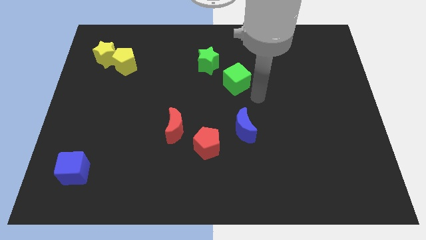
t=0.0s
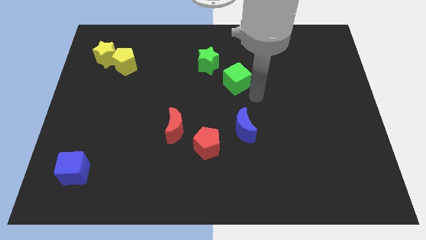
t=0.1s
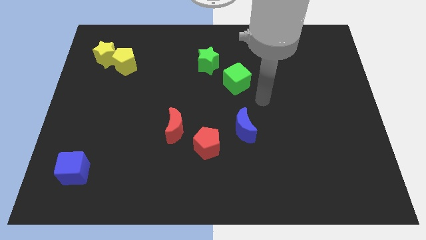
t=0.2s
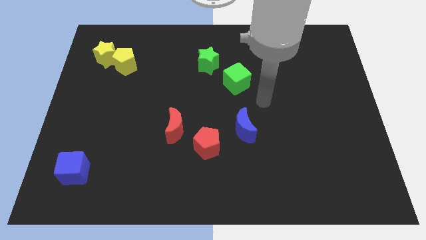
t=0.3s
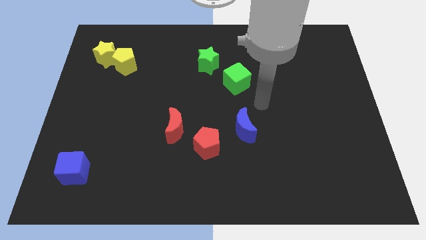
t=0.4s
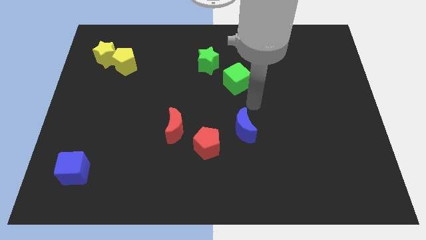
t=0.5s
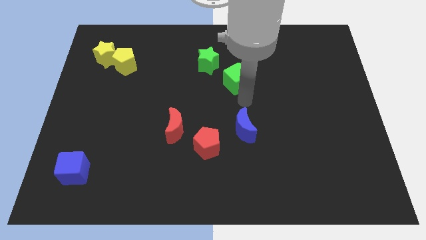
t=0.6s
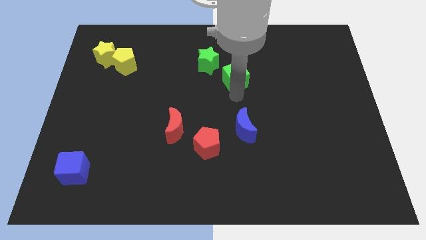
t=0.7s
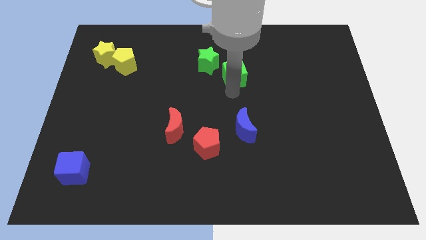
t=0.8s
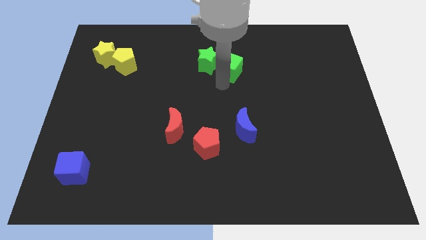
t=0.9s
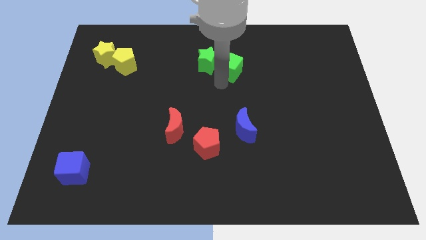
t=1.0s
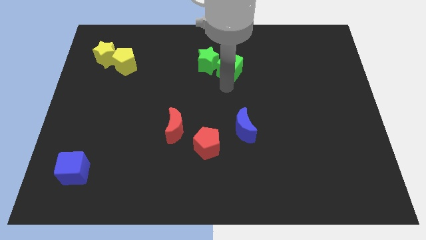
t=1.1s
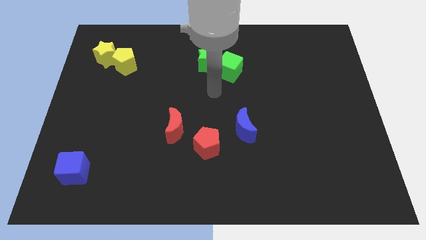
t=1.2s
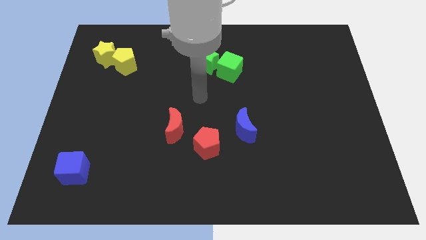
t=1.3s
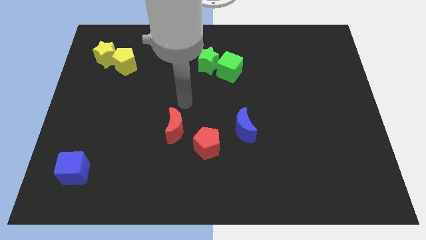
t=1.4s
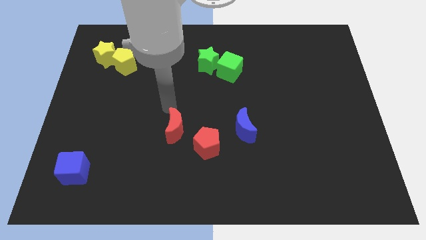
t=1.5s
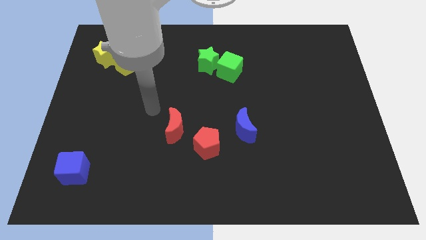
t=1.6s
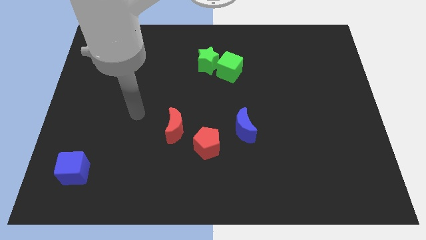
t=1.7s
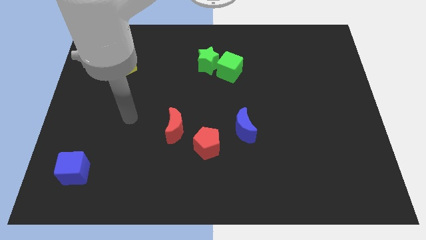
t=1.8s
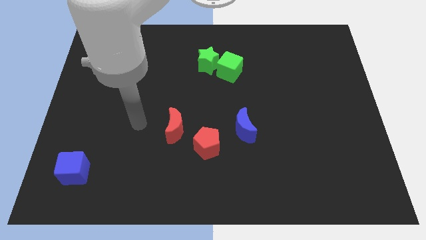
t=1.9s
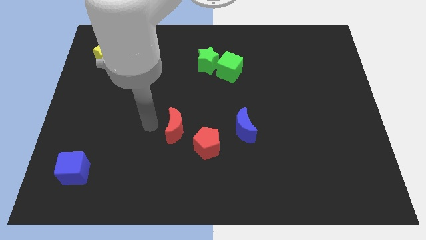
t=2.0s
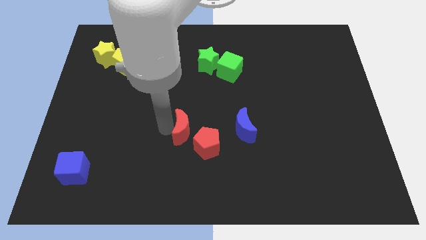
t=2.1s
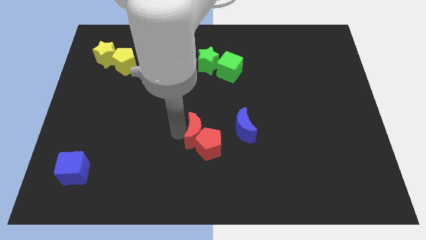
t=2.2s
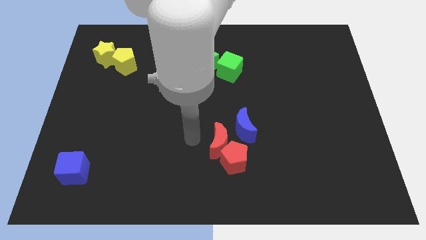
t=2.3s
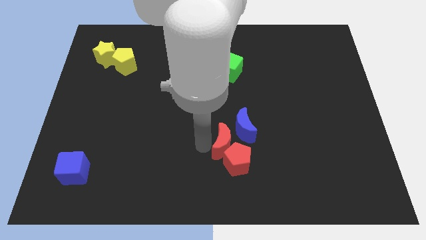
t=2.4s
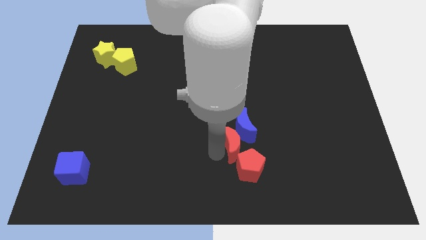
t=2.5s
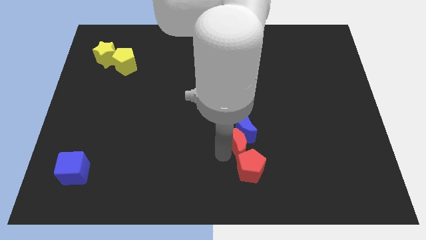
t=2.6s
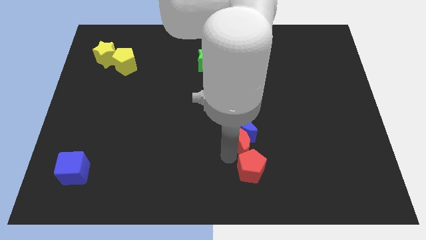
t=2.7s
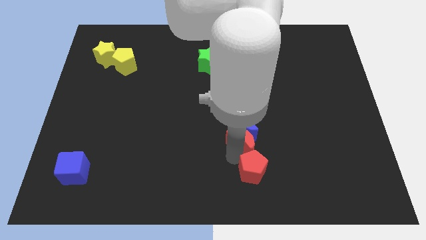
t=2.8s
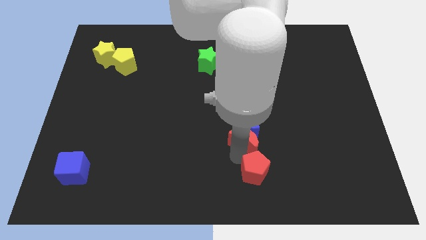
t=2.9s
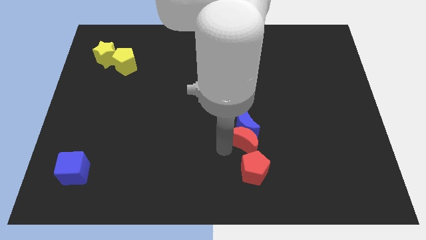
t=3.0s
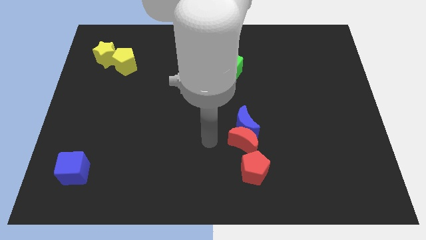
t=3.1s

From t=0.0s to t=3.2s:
drag the red pentagon and red moon to the bottom center

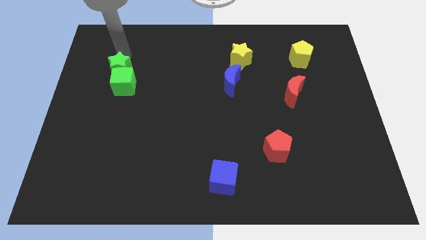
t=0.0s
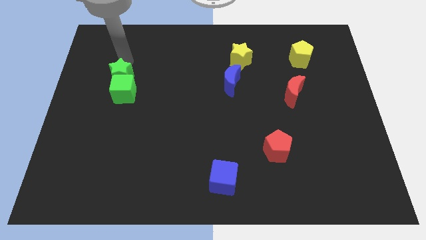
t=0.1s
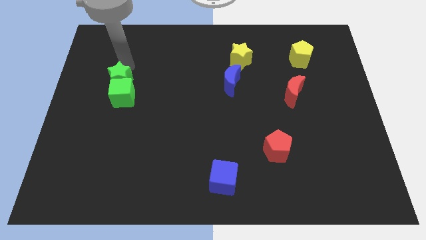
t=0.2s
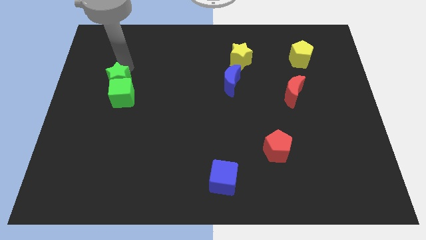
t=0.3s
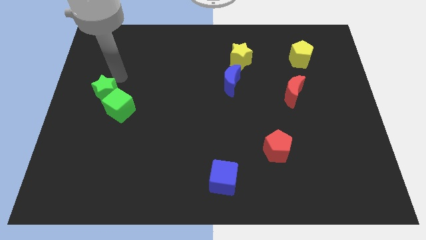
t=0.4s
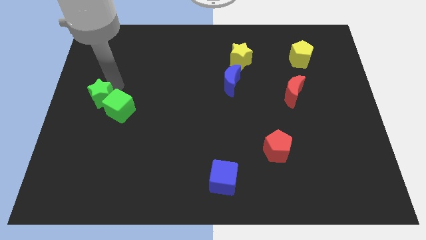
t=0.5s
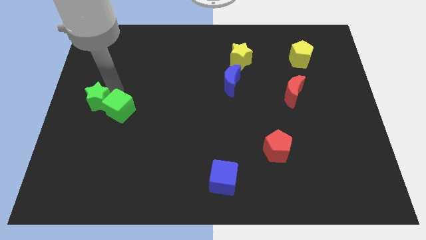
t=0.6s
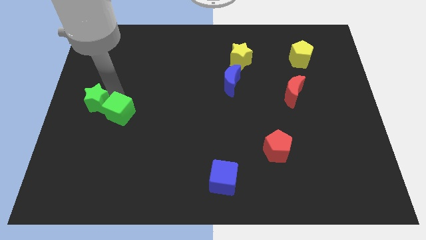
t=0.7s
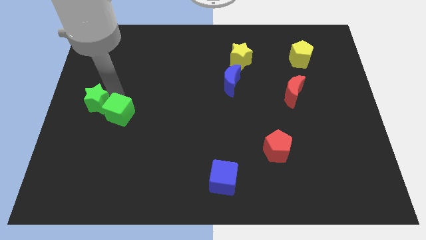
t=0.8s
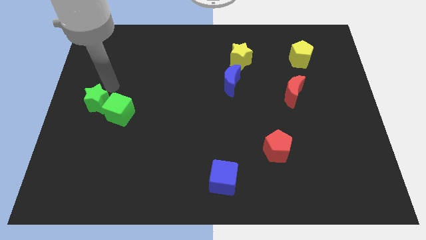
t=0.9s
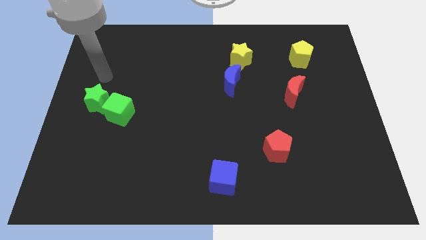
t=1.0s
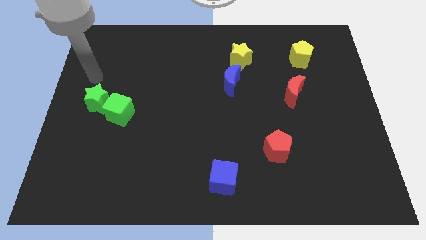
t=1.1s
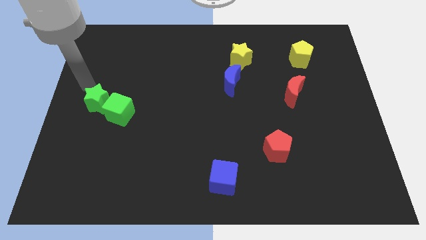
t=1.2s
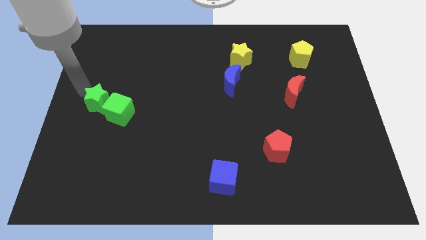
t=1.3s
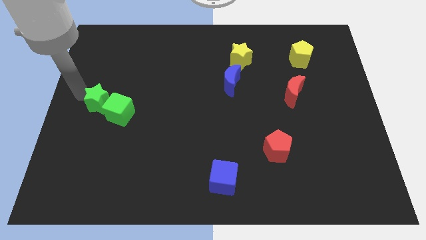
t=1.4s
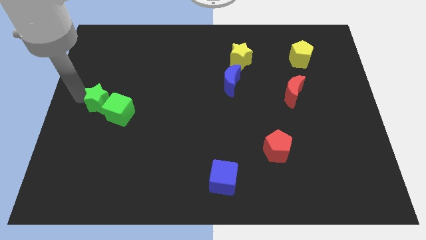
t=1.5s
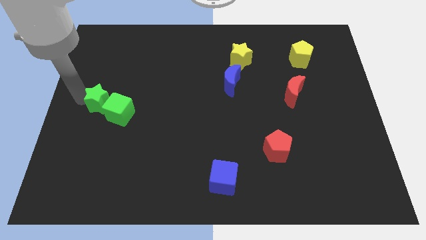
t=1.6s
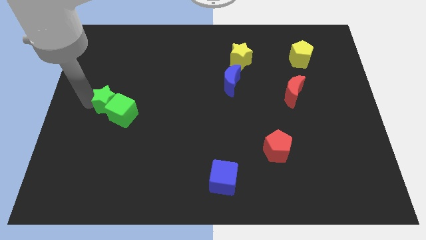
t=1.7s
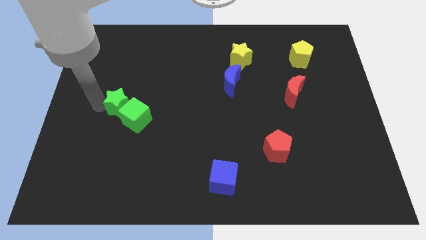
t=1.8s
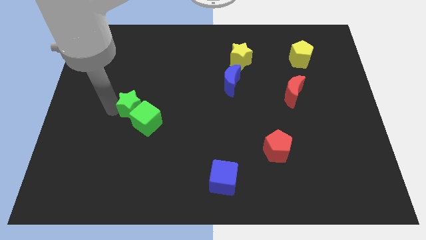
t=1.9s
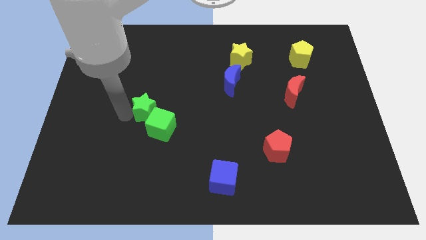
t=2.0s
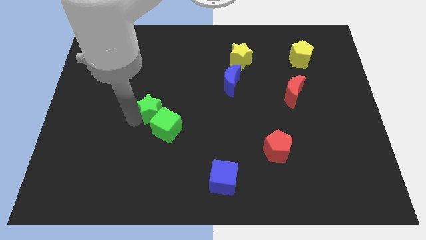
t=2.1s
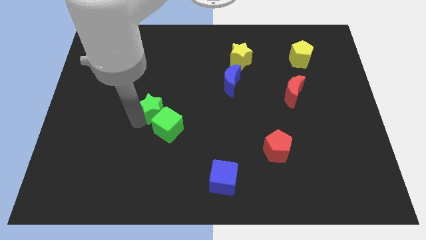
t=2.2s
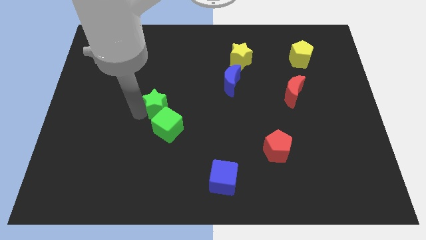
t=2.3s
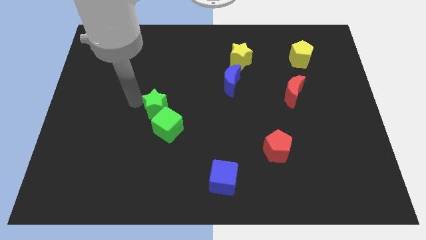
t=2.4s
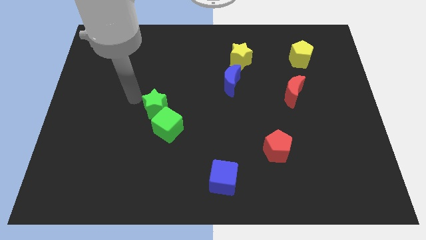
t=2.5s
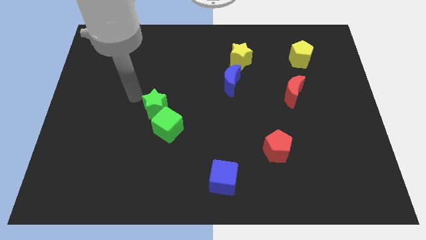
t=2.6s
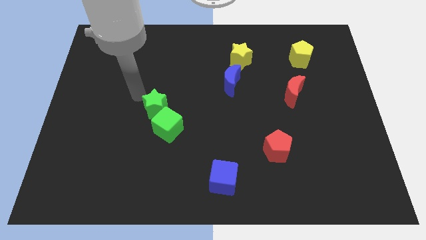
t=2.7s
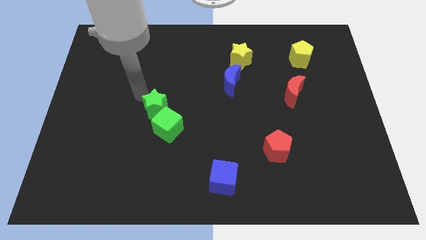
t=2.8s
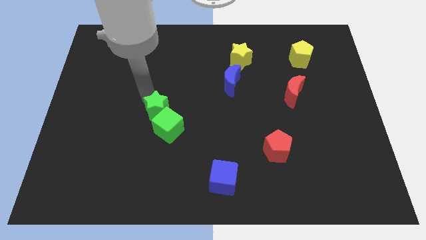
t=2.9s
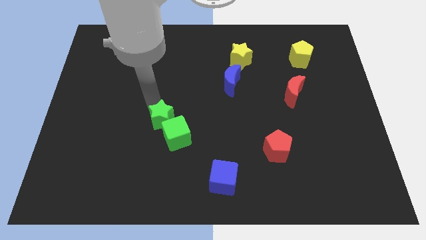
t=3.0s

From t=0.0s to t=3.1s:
move the green blocks diagonally to the top left of the blue cube

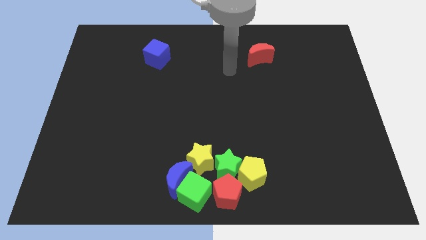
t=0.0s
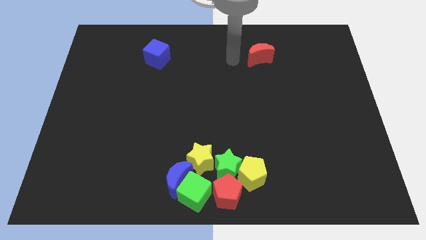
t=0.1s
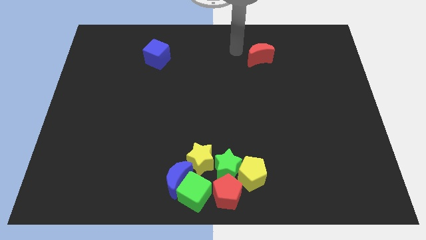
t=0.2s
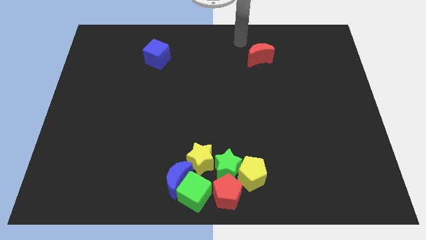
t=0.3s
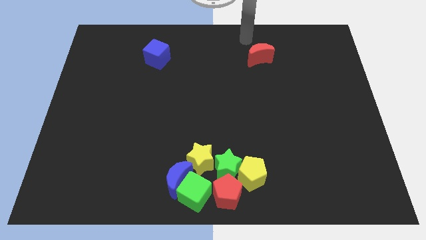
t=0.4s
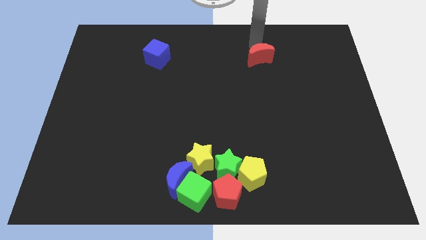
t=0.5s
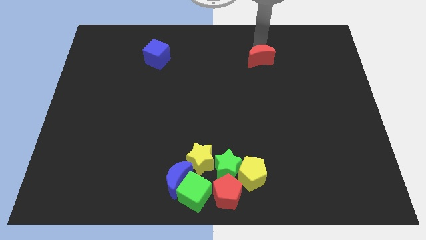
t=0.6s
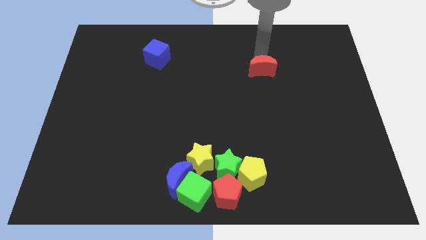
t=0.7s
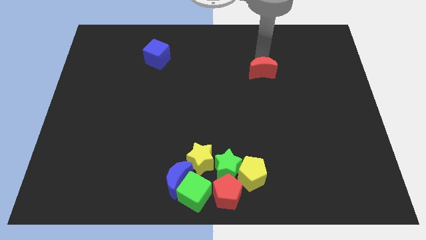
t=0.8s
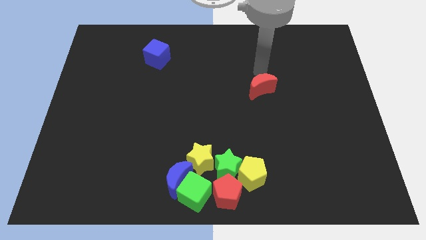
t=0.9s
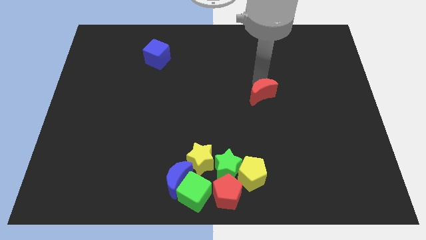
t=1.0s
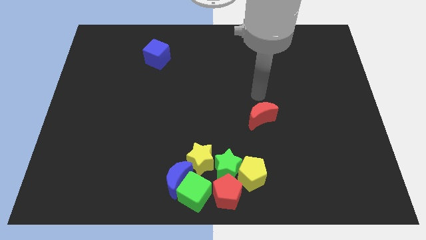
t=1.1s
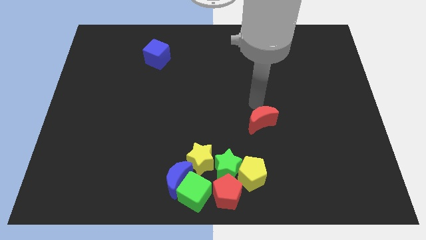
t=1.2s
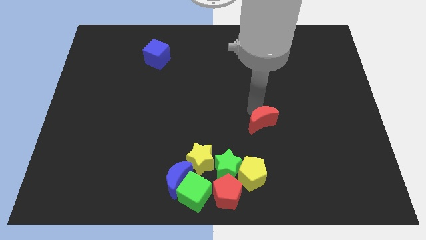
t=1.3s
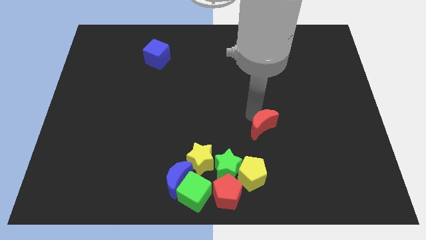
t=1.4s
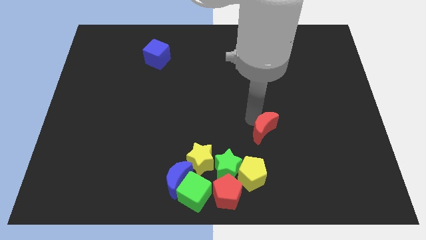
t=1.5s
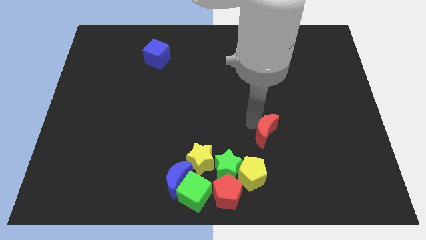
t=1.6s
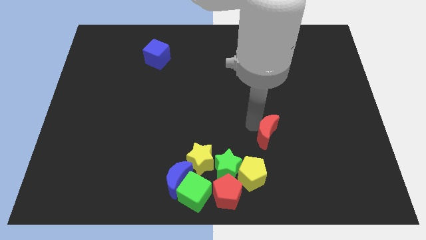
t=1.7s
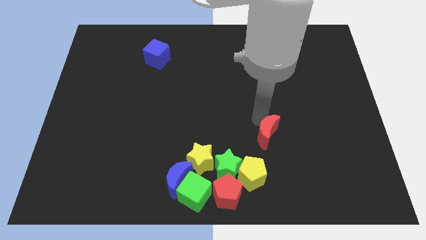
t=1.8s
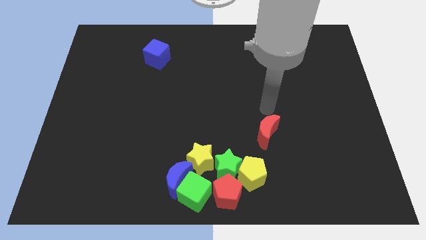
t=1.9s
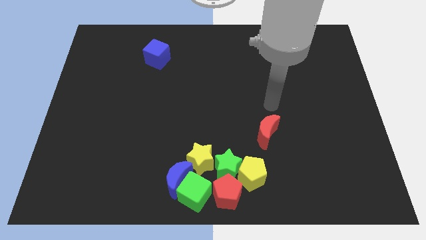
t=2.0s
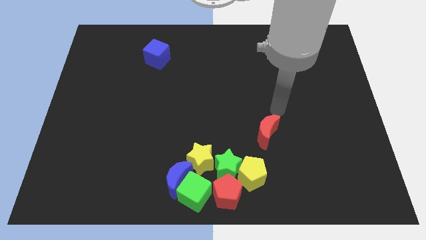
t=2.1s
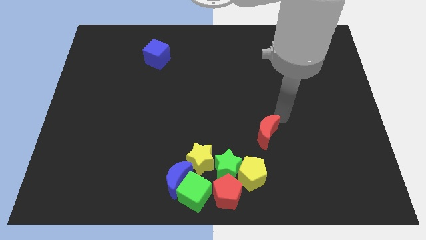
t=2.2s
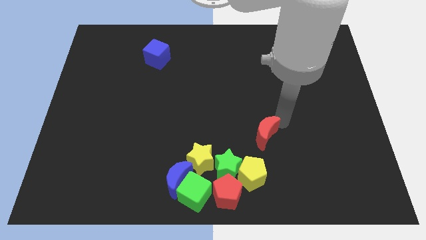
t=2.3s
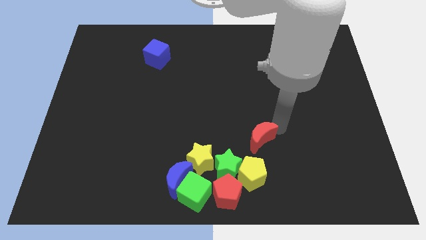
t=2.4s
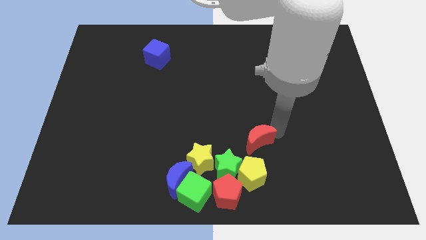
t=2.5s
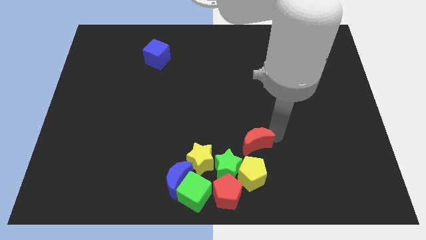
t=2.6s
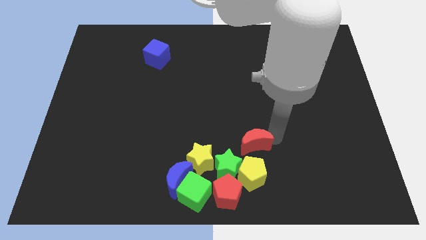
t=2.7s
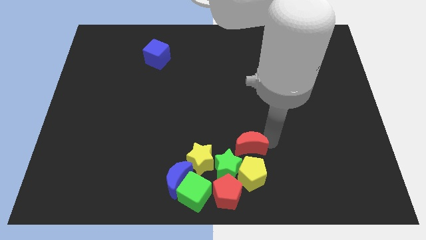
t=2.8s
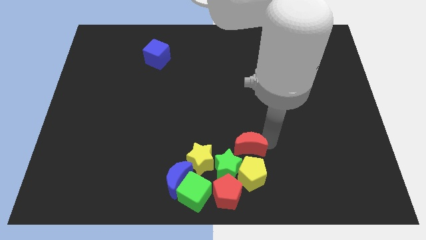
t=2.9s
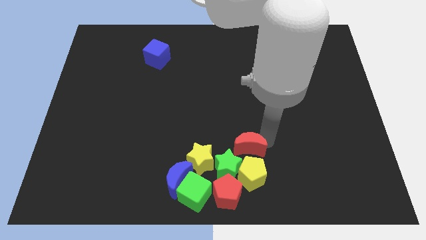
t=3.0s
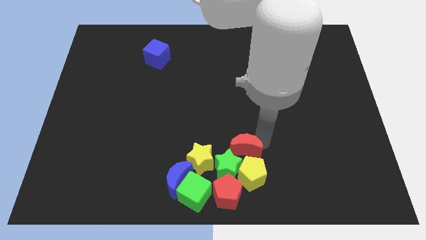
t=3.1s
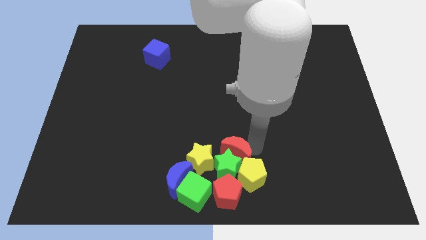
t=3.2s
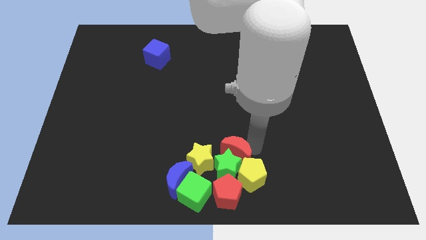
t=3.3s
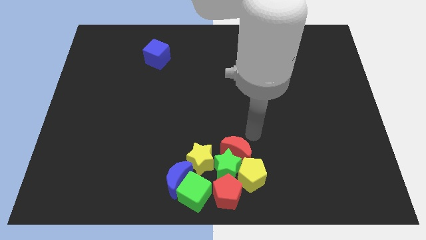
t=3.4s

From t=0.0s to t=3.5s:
push the red crescent into the group of blocks
